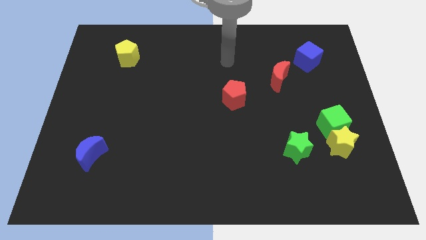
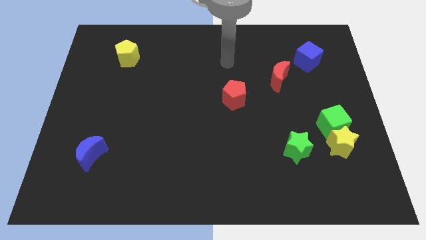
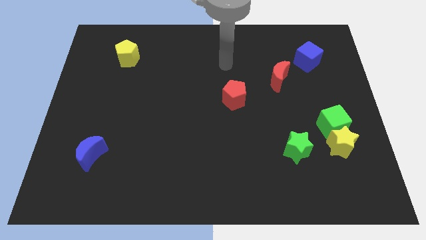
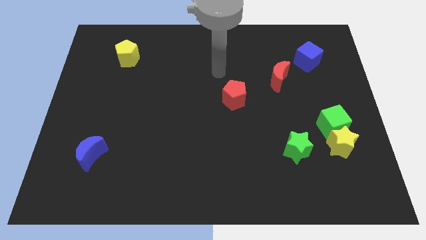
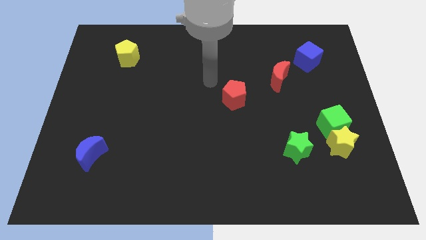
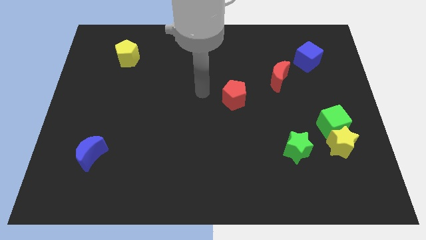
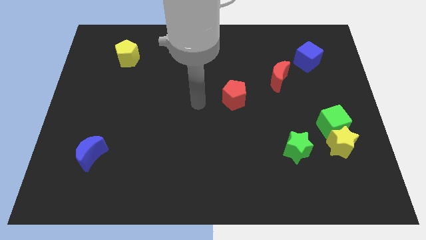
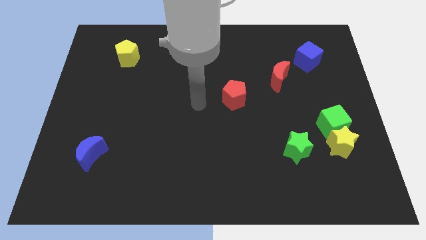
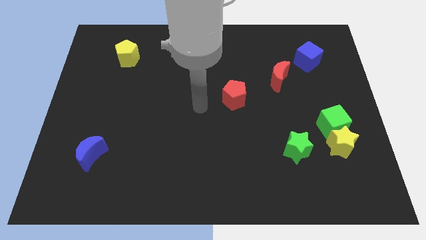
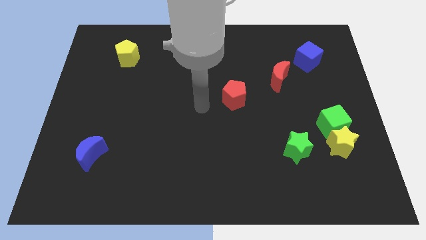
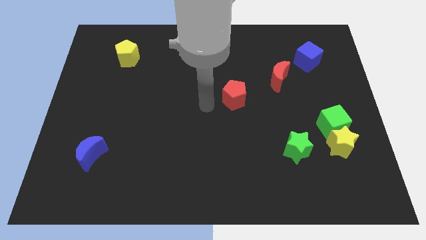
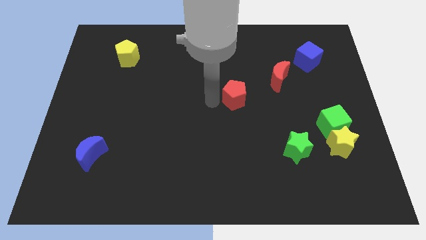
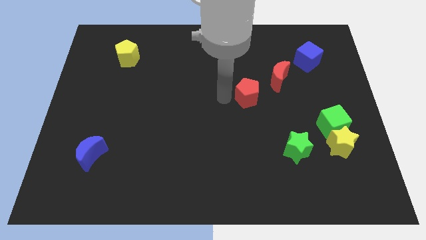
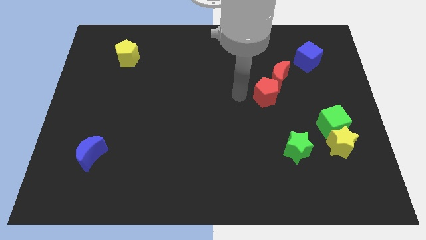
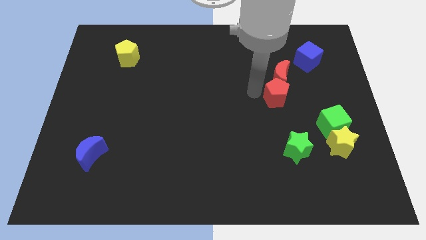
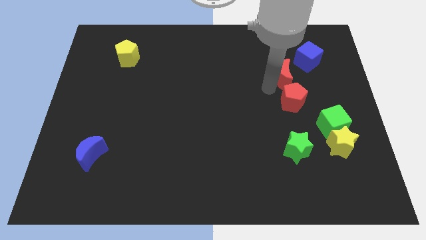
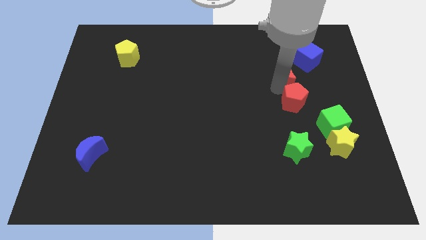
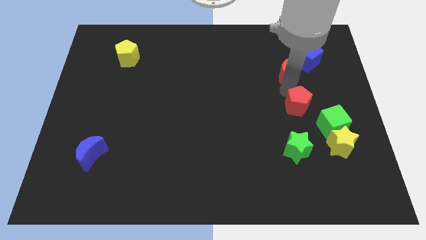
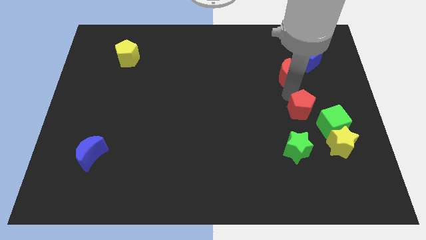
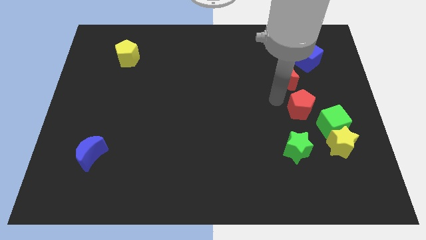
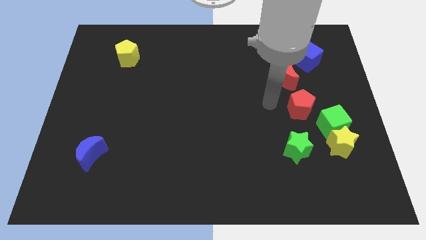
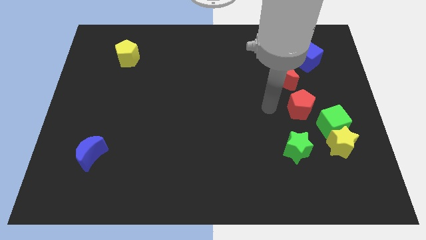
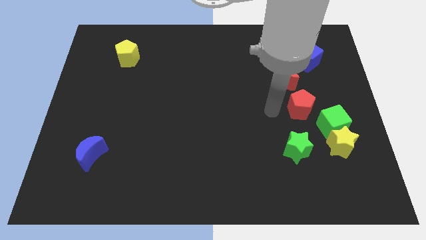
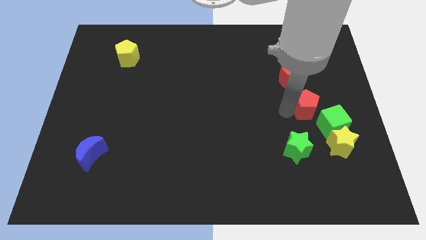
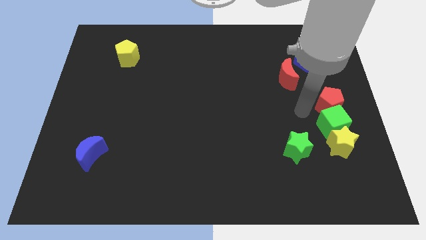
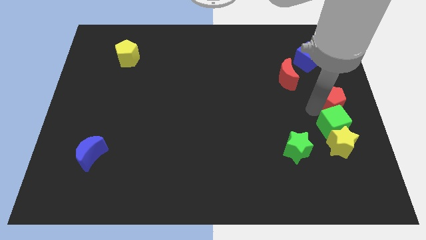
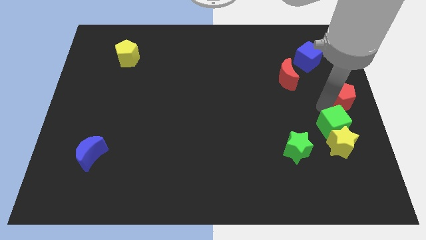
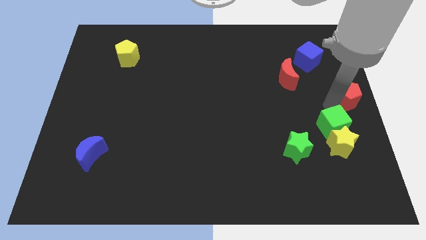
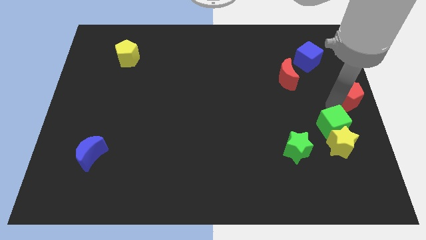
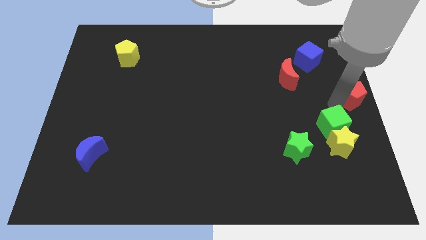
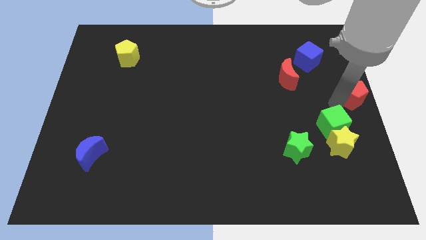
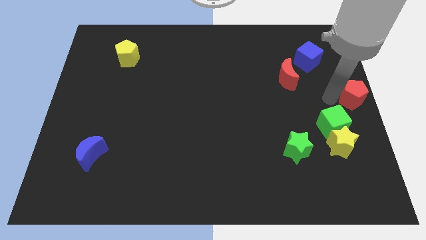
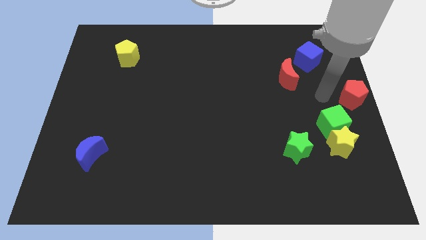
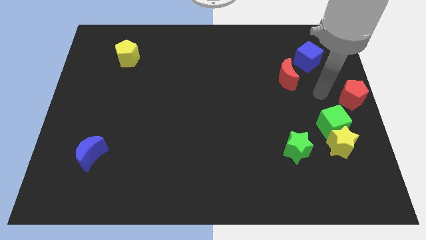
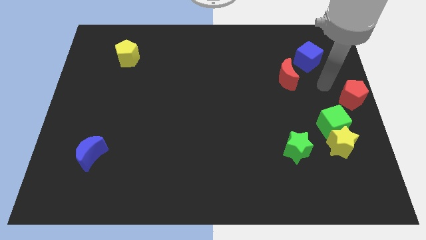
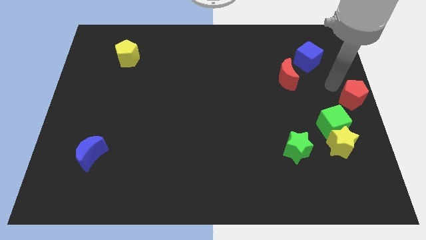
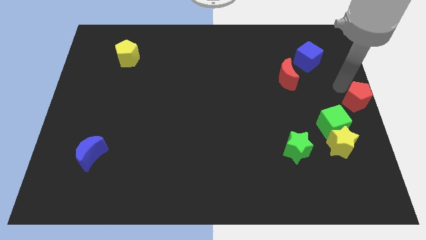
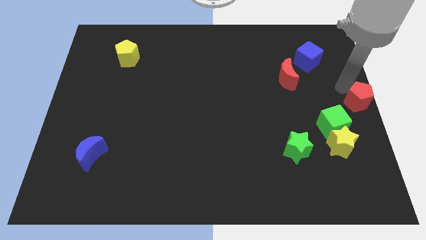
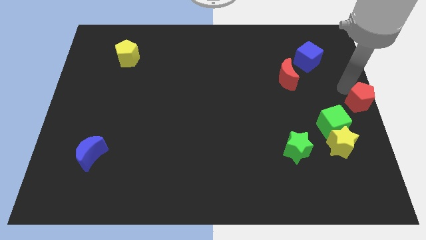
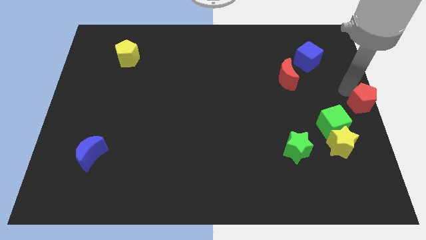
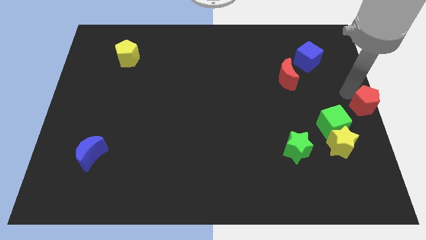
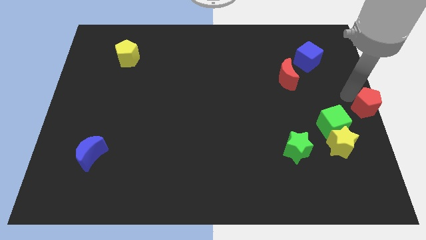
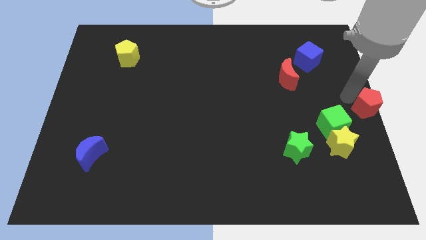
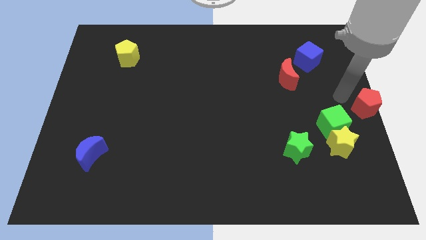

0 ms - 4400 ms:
move the red pentagon to the center right side of the board

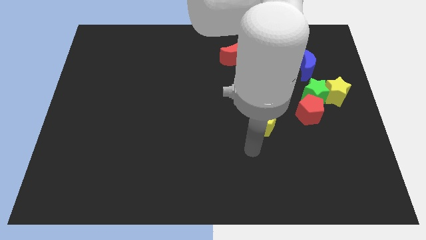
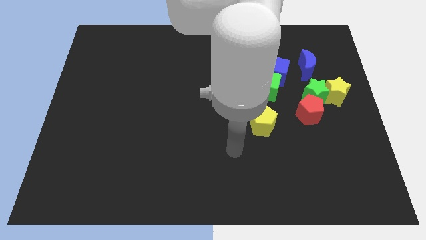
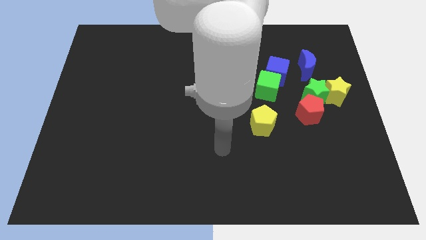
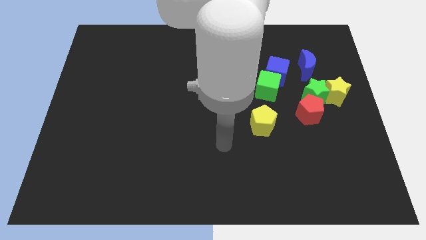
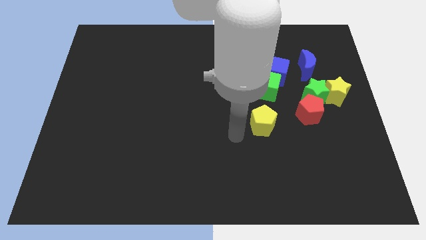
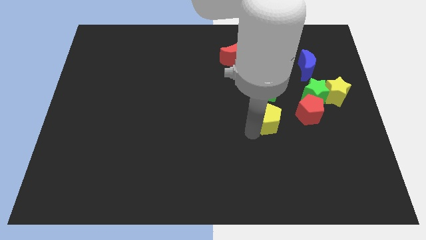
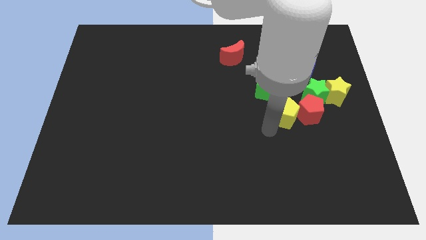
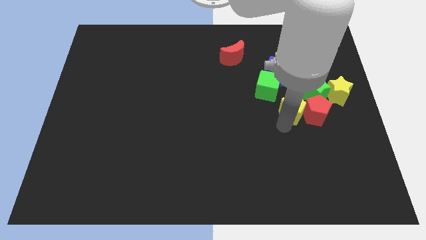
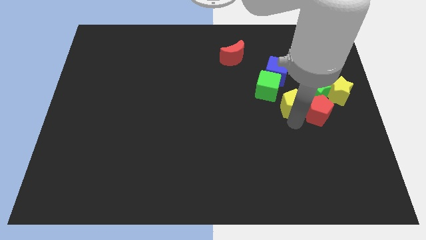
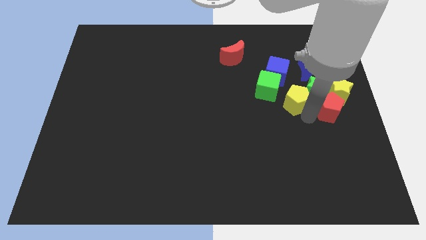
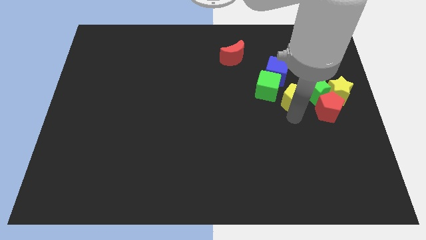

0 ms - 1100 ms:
move the yellow pentagon left beside the green star

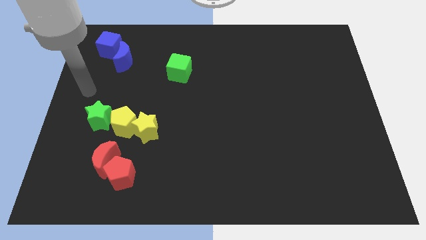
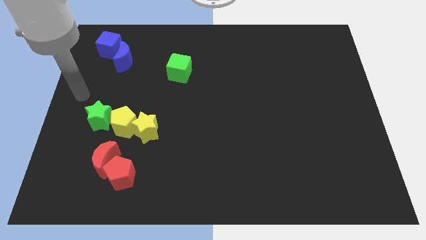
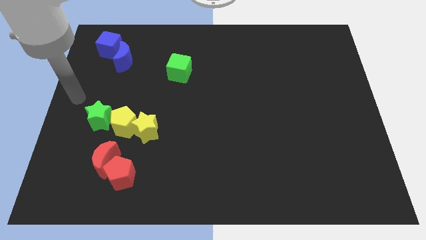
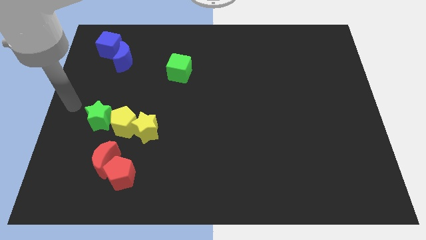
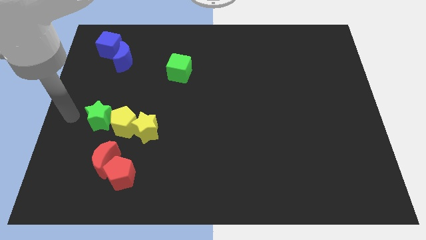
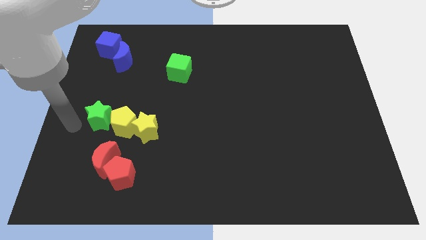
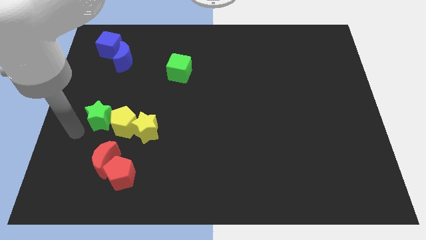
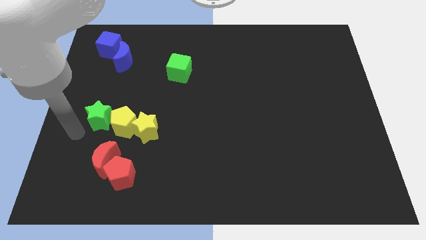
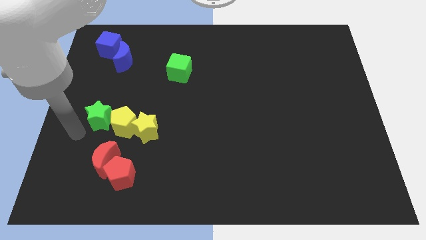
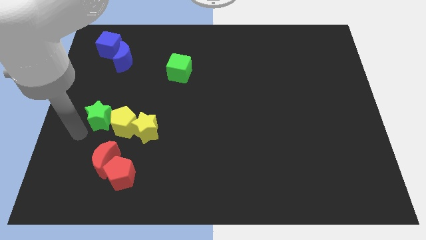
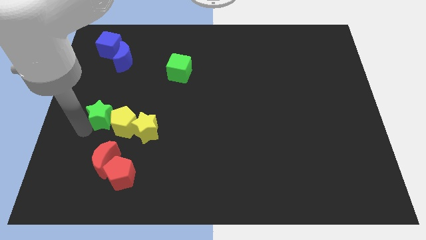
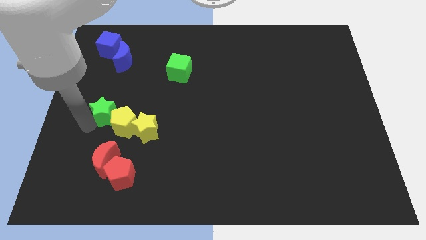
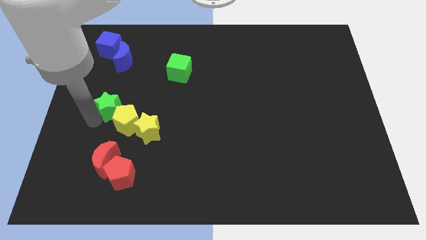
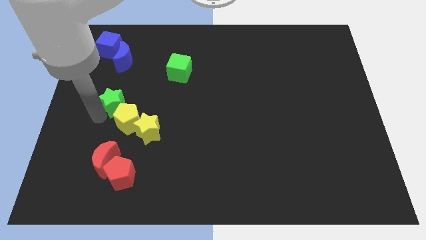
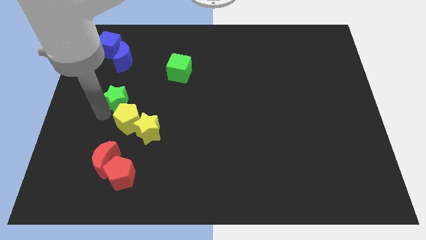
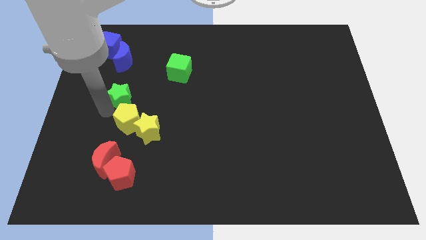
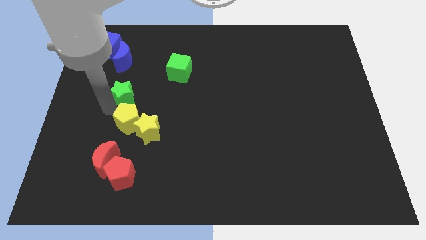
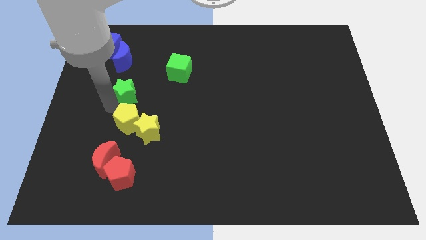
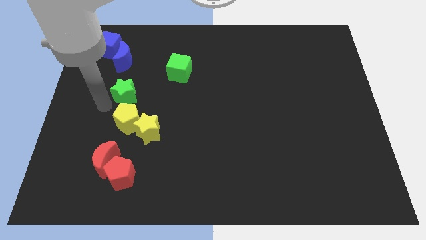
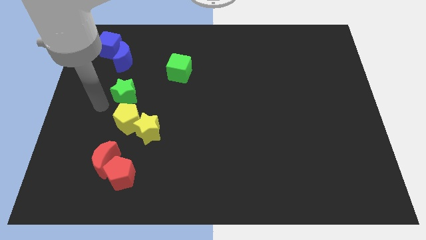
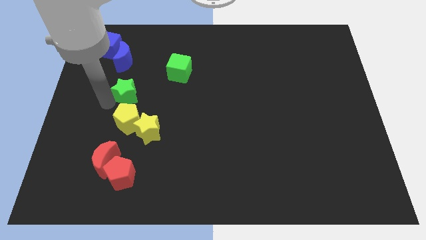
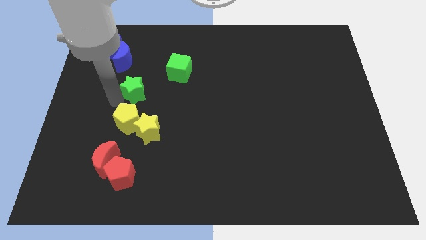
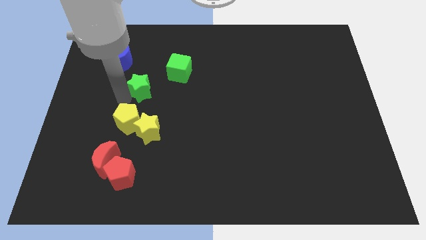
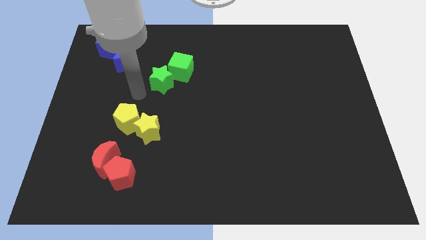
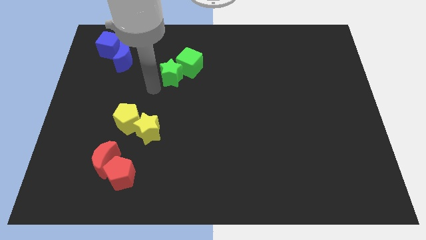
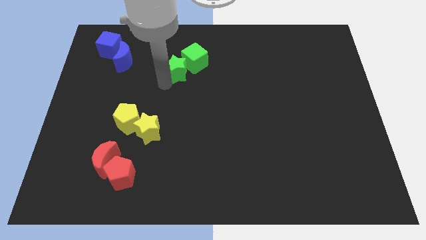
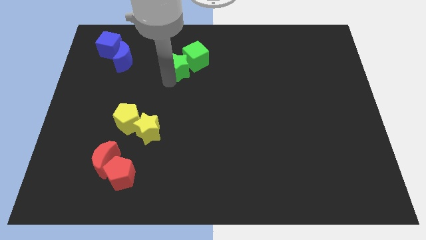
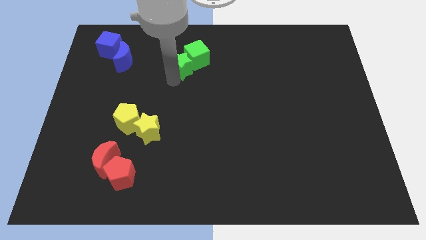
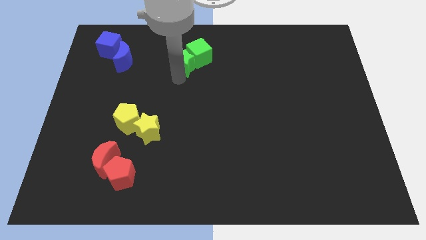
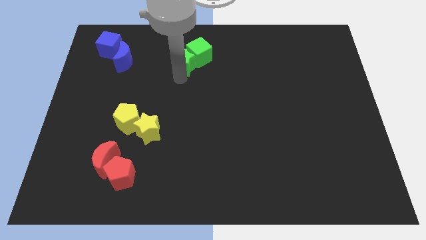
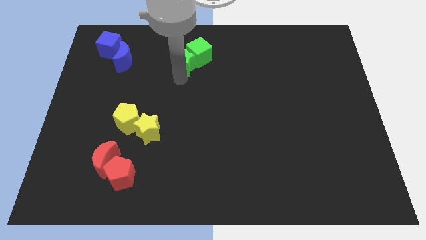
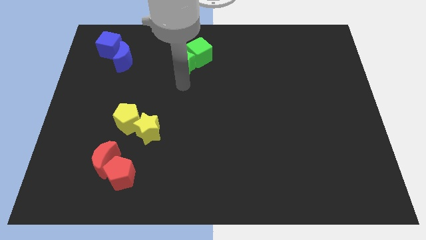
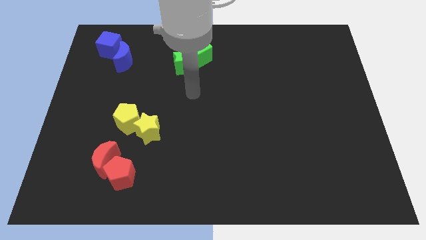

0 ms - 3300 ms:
push green star towards green cube

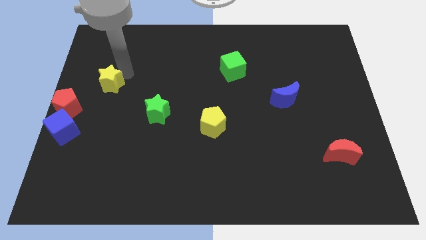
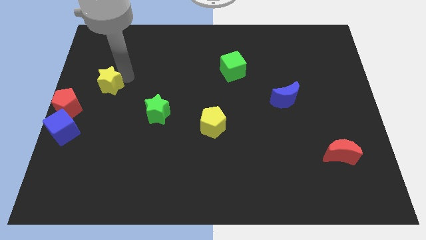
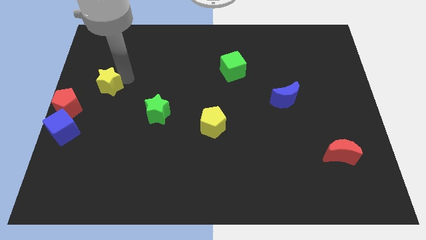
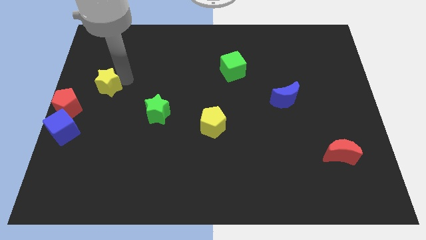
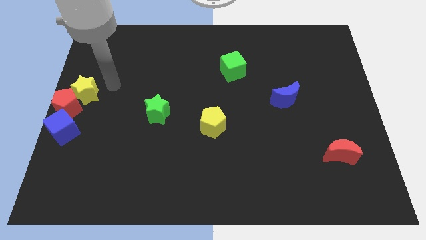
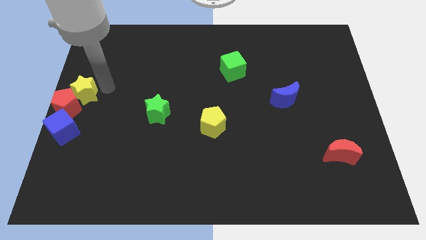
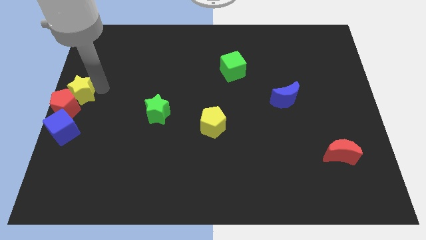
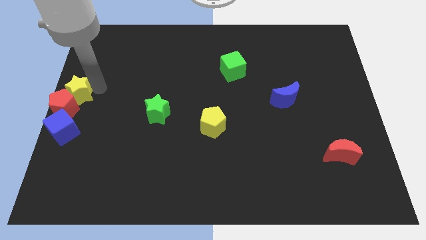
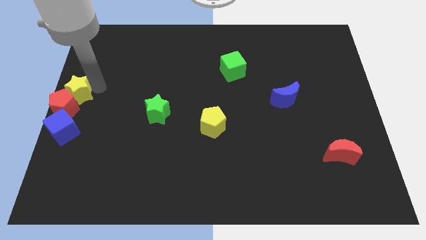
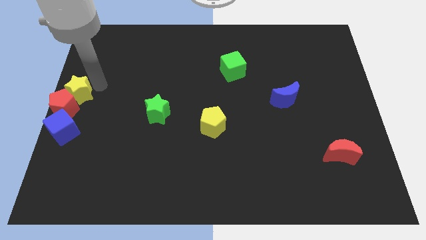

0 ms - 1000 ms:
push the yellow star into the red pentagon
